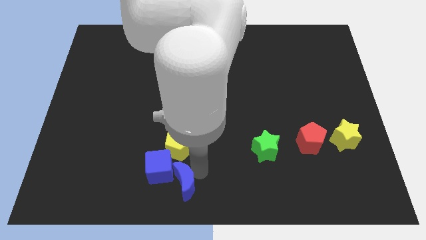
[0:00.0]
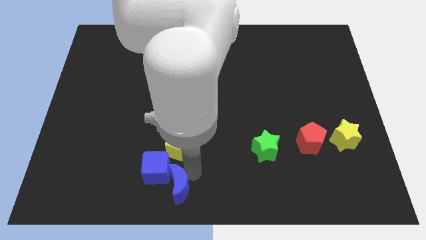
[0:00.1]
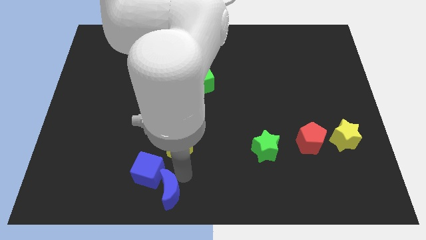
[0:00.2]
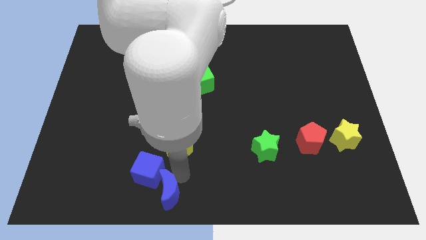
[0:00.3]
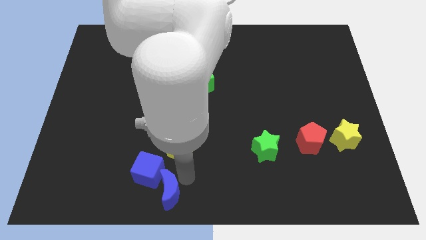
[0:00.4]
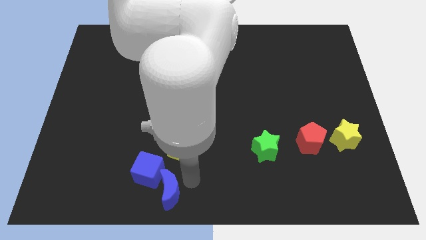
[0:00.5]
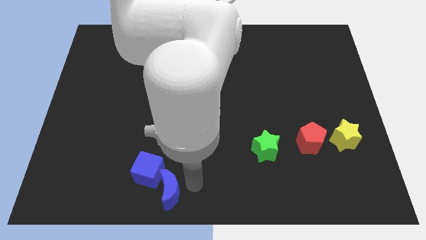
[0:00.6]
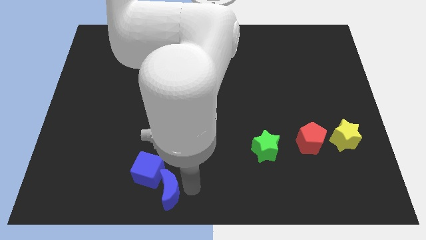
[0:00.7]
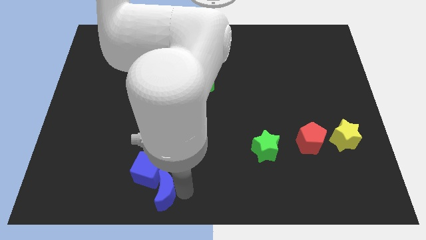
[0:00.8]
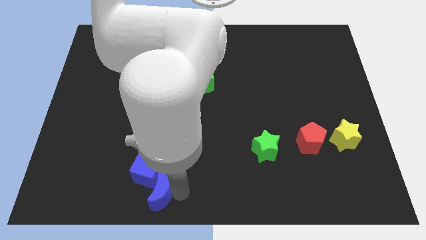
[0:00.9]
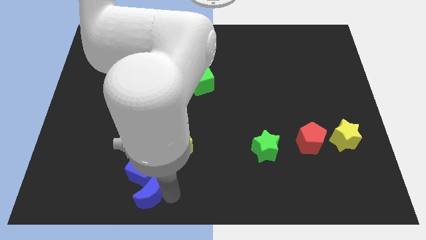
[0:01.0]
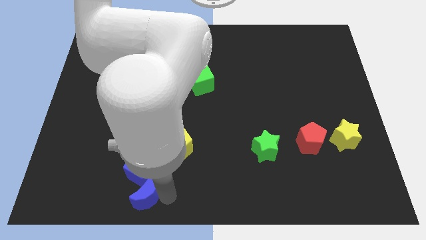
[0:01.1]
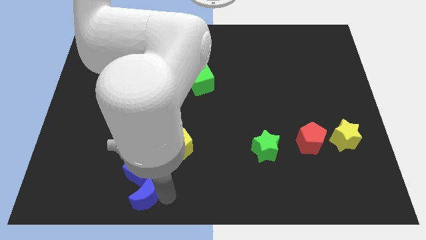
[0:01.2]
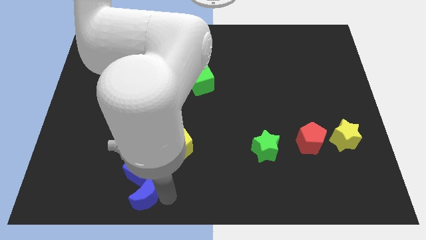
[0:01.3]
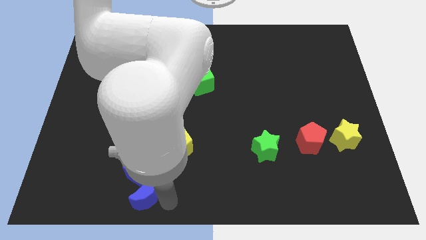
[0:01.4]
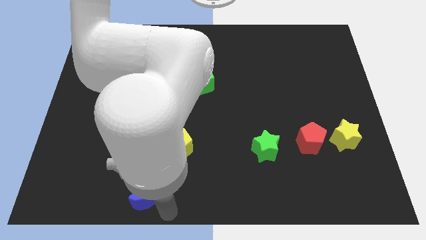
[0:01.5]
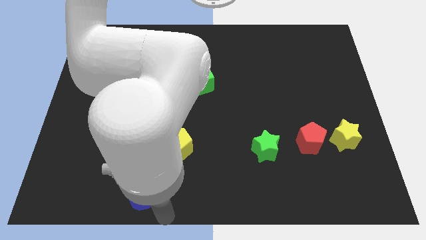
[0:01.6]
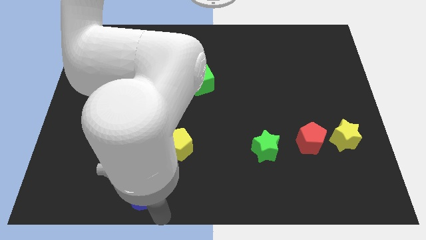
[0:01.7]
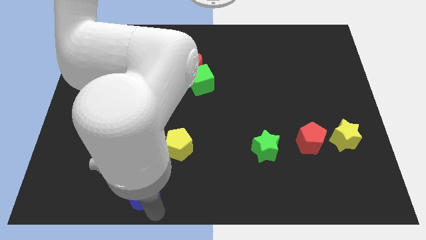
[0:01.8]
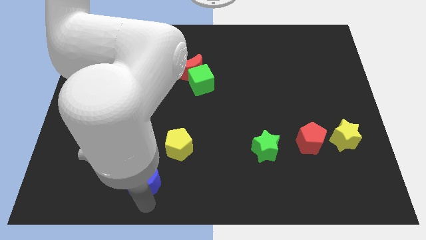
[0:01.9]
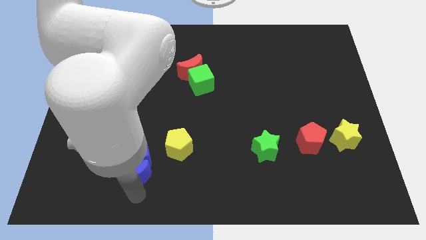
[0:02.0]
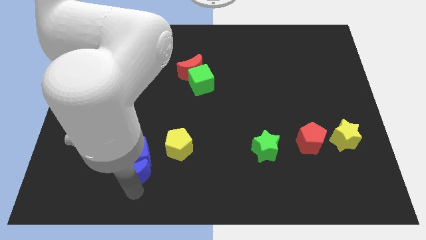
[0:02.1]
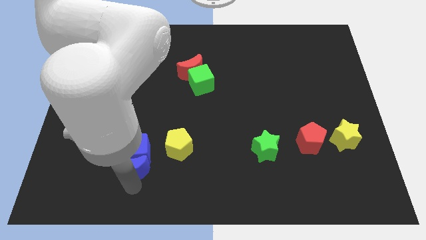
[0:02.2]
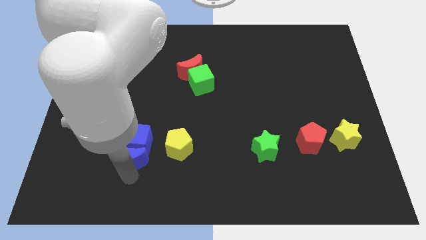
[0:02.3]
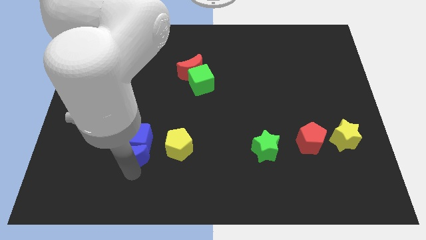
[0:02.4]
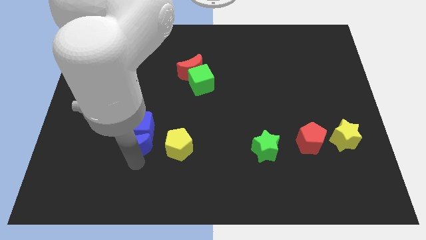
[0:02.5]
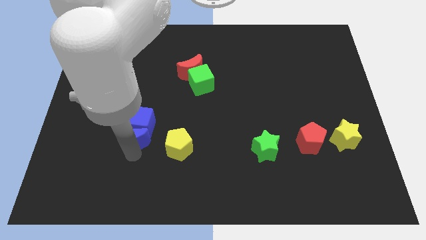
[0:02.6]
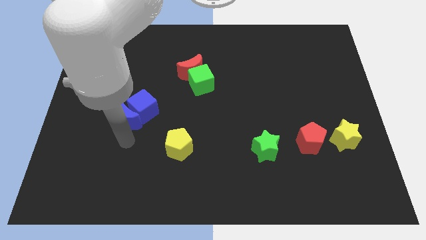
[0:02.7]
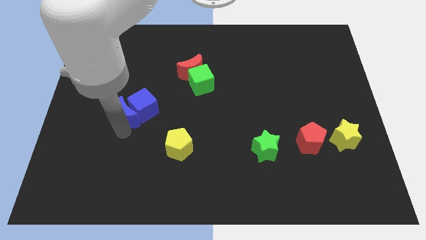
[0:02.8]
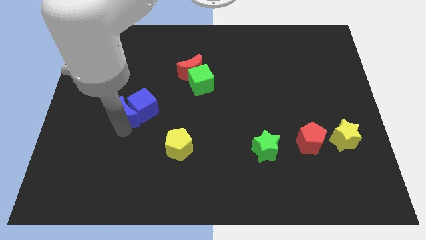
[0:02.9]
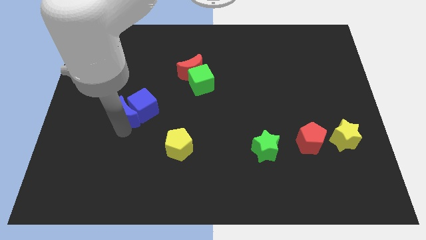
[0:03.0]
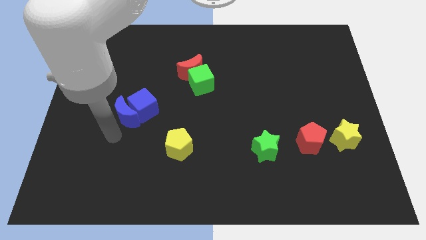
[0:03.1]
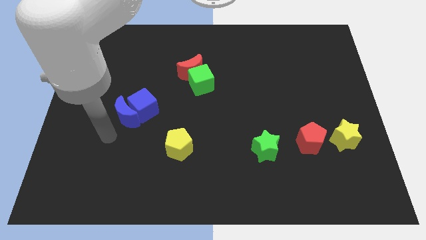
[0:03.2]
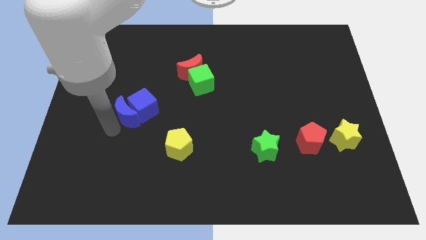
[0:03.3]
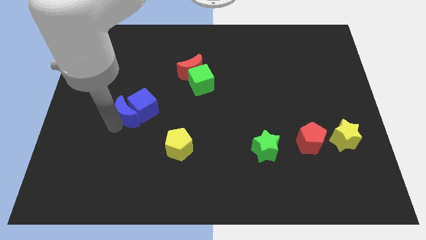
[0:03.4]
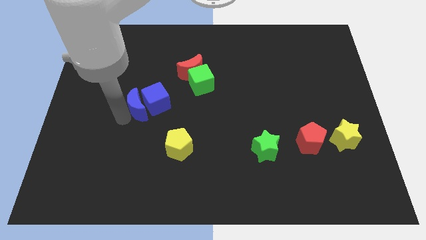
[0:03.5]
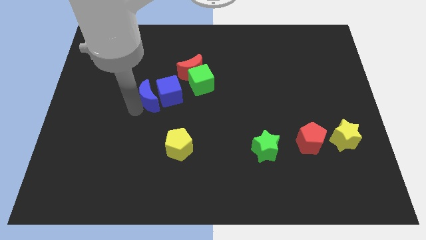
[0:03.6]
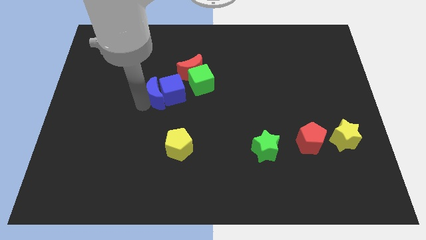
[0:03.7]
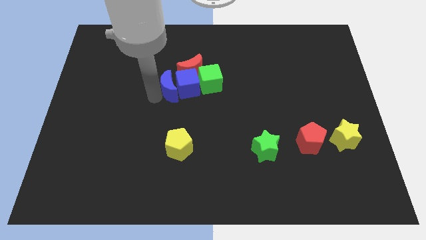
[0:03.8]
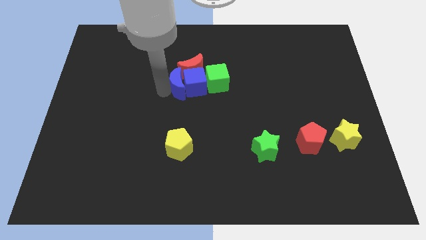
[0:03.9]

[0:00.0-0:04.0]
slide both the blue blocks to the top side of the yellow pentagon

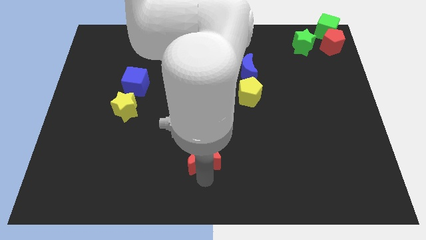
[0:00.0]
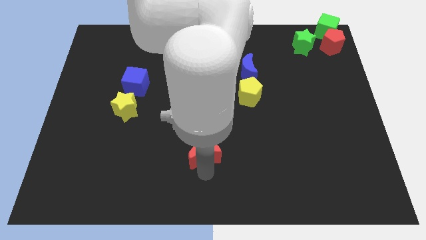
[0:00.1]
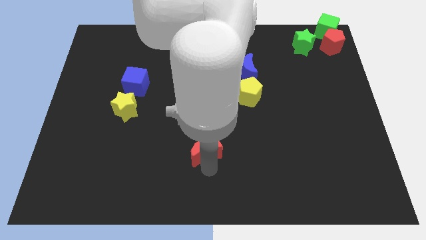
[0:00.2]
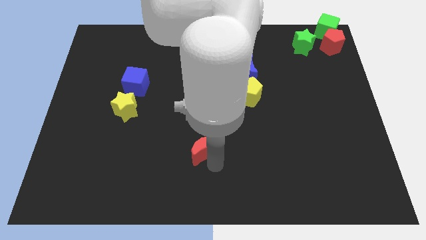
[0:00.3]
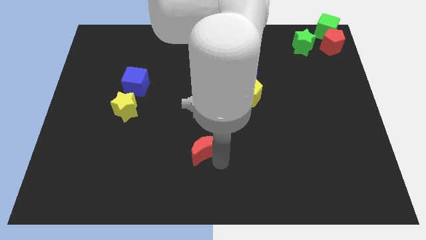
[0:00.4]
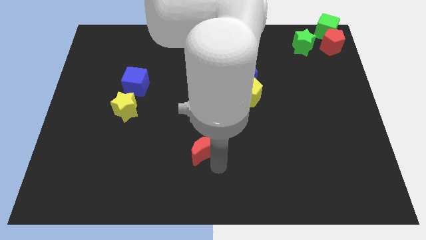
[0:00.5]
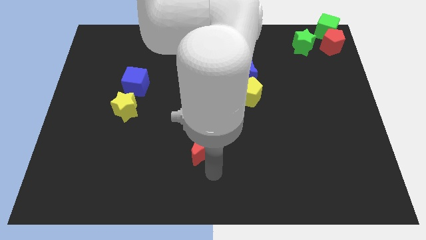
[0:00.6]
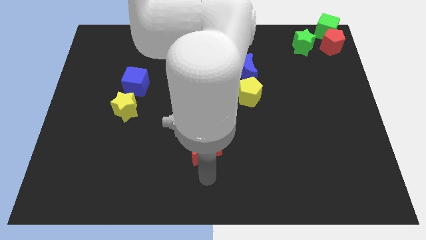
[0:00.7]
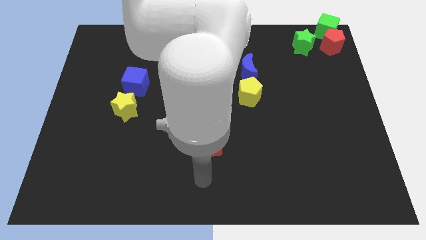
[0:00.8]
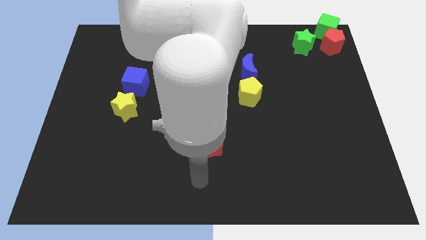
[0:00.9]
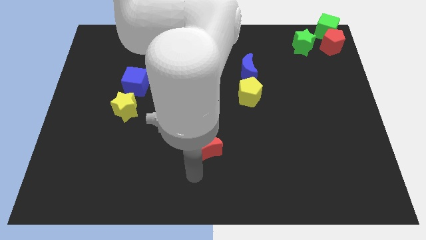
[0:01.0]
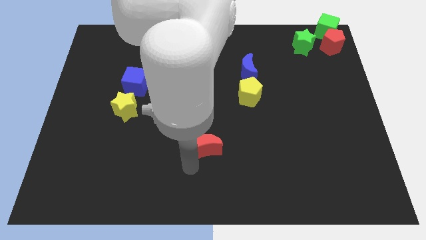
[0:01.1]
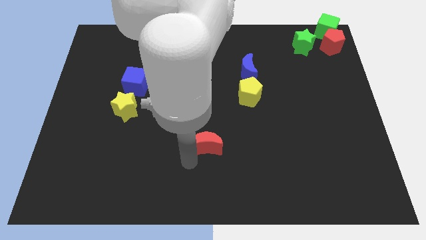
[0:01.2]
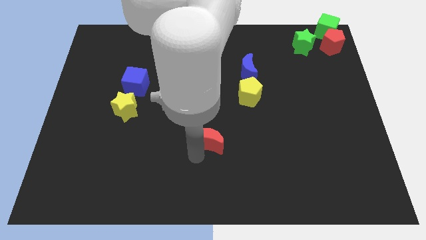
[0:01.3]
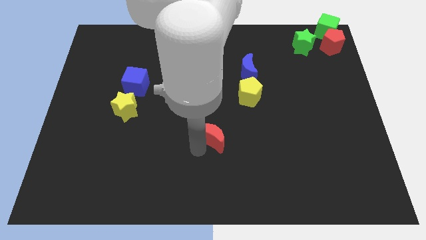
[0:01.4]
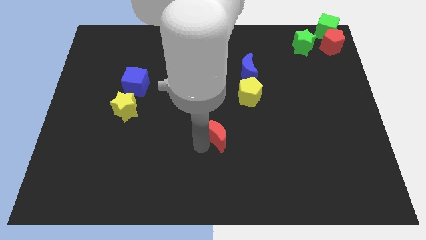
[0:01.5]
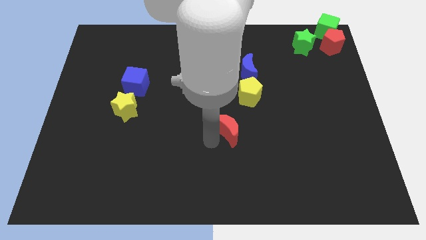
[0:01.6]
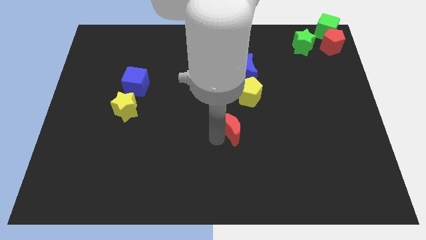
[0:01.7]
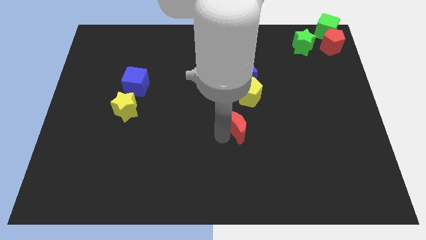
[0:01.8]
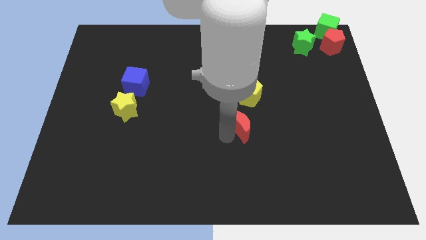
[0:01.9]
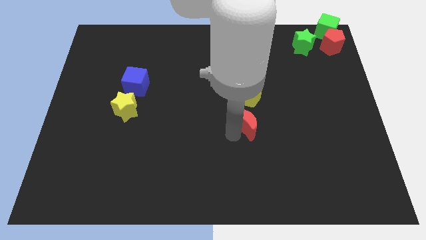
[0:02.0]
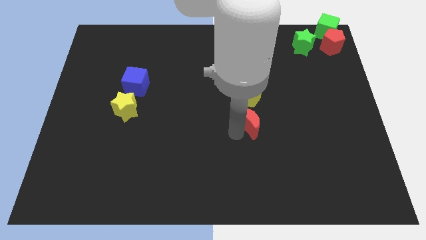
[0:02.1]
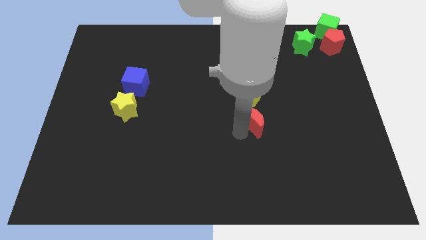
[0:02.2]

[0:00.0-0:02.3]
put the red moon below the yellow pentagon

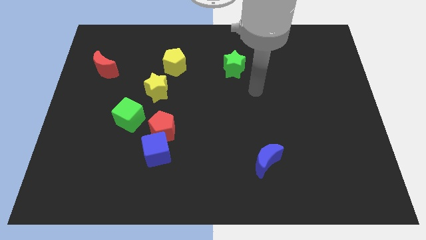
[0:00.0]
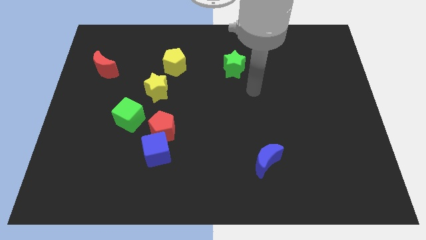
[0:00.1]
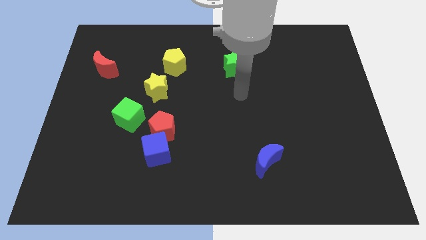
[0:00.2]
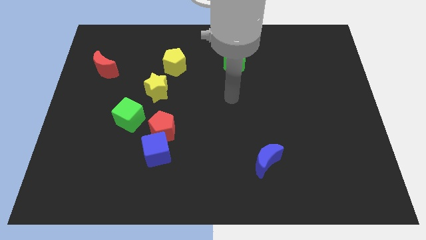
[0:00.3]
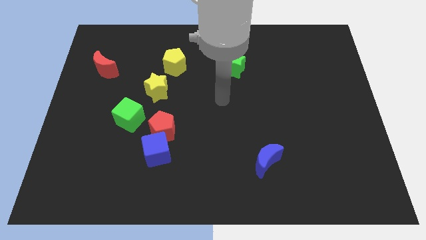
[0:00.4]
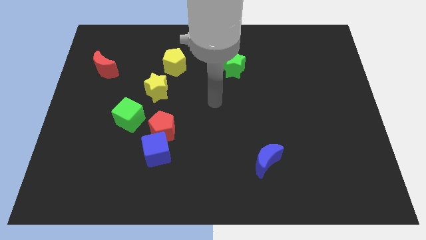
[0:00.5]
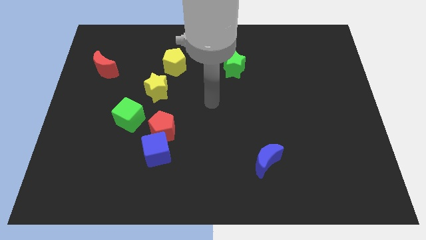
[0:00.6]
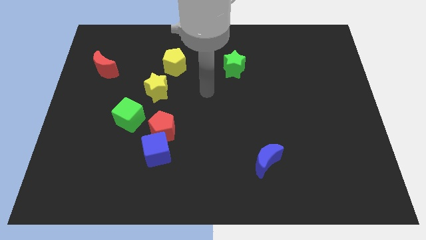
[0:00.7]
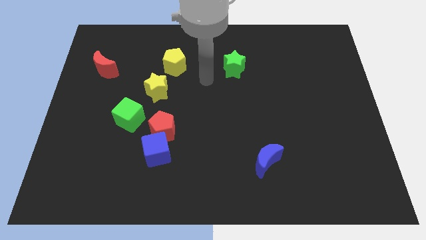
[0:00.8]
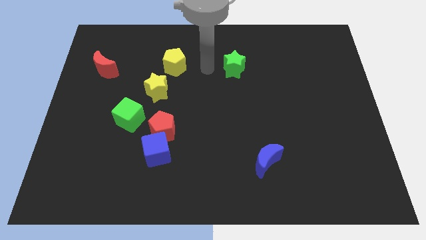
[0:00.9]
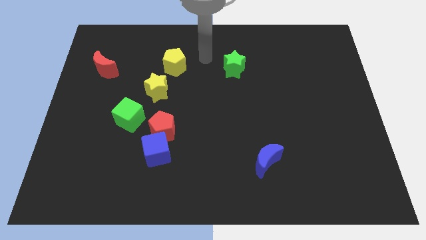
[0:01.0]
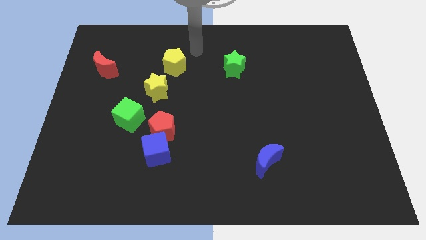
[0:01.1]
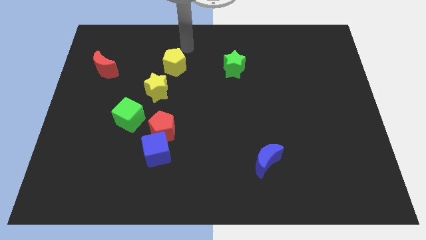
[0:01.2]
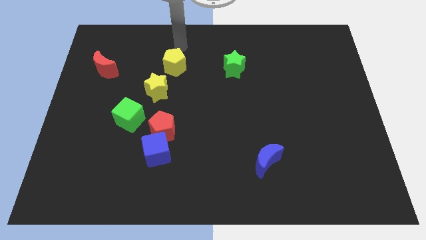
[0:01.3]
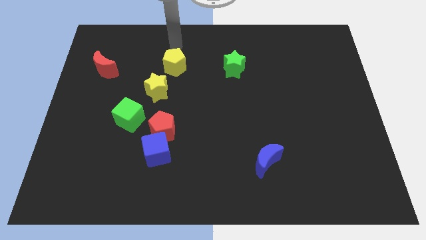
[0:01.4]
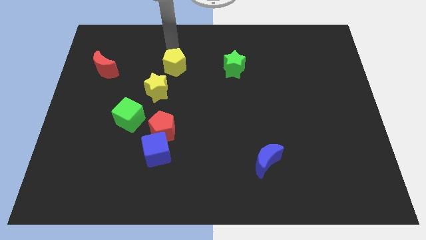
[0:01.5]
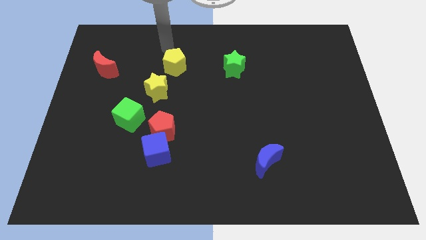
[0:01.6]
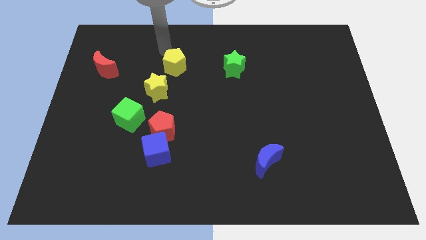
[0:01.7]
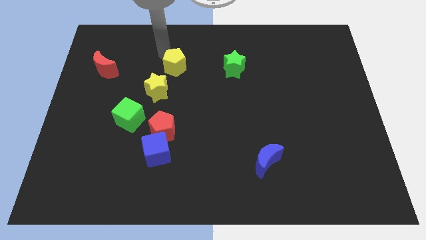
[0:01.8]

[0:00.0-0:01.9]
point your arm to the top of the yellow pentagon

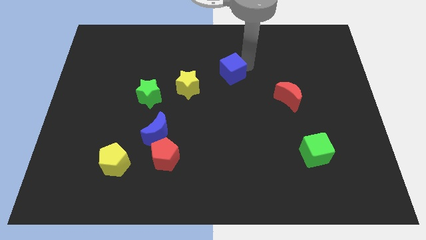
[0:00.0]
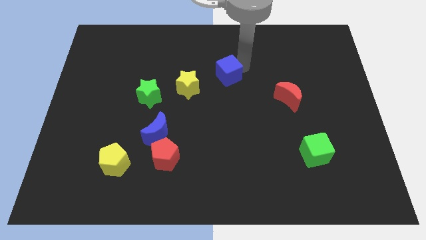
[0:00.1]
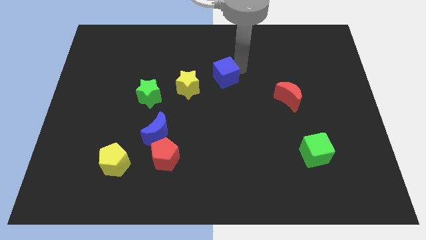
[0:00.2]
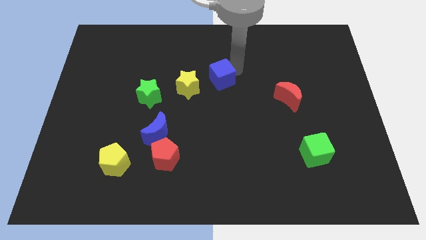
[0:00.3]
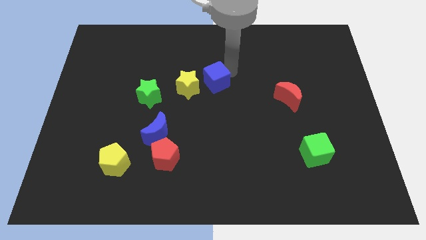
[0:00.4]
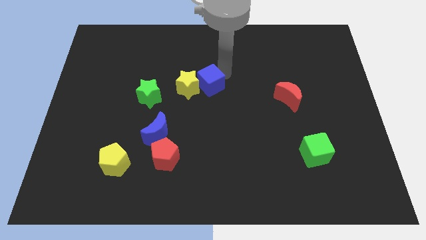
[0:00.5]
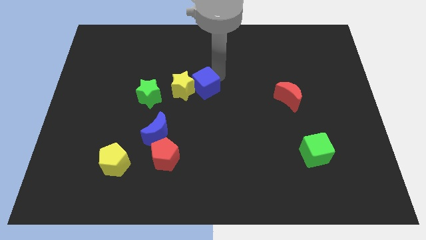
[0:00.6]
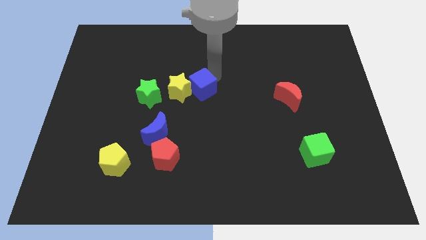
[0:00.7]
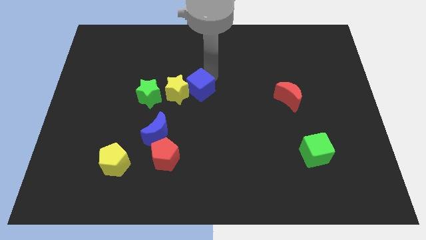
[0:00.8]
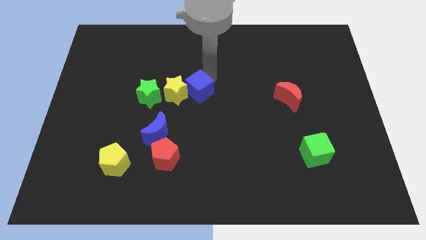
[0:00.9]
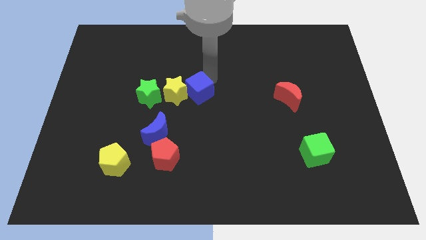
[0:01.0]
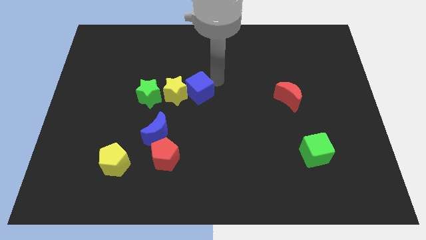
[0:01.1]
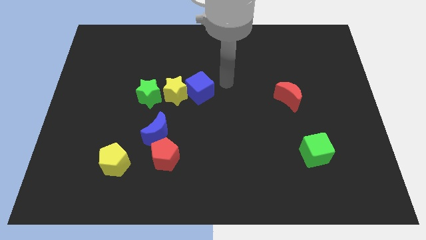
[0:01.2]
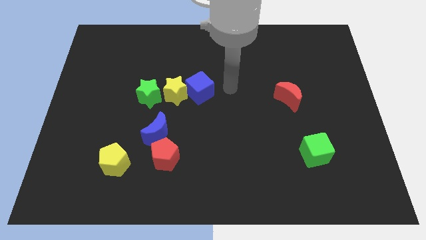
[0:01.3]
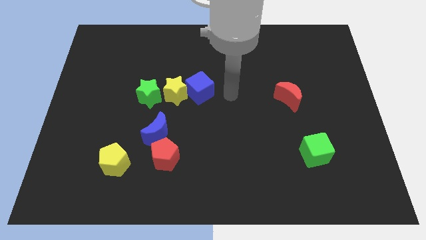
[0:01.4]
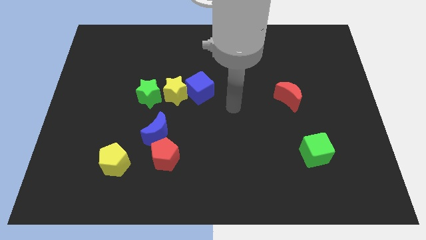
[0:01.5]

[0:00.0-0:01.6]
push the blue cube into the yellow moon
